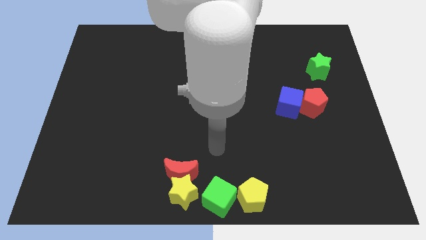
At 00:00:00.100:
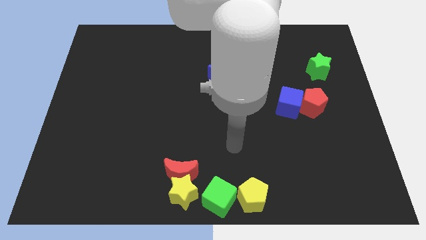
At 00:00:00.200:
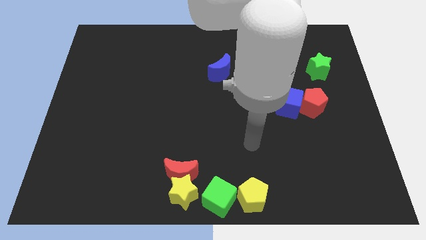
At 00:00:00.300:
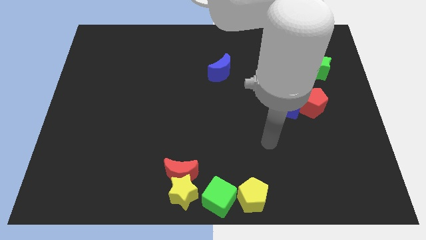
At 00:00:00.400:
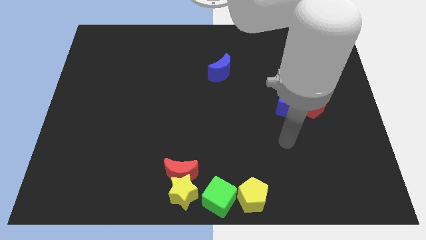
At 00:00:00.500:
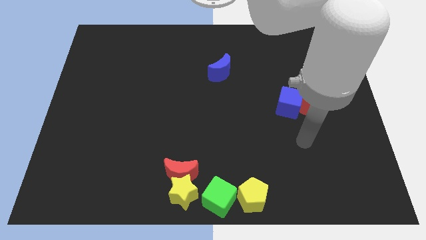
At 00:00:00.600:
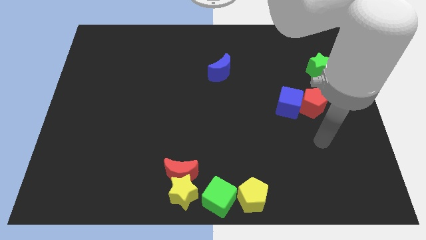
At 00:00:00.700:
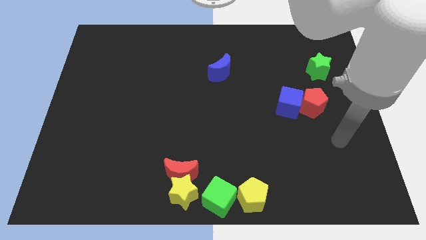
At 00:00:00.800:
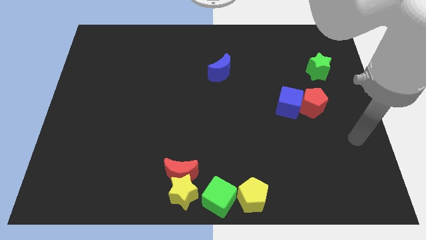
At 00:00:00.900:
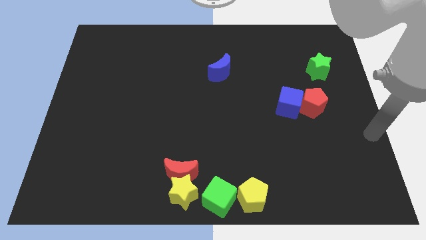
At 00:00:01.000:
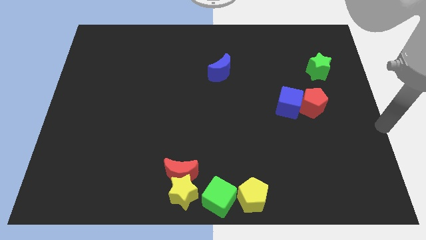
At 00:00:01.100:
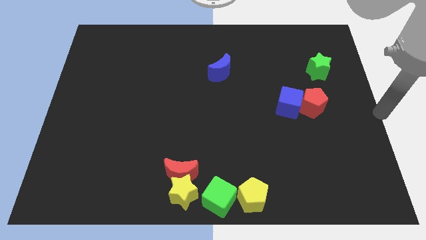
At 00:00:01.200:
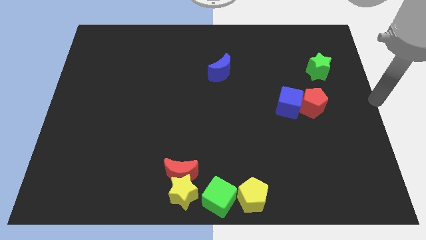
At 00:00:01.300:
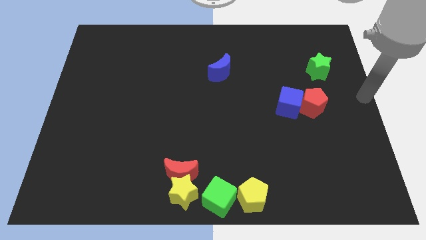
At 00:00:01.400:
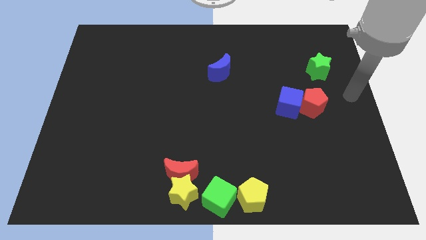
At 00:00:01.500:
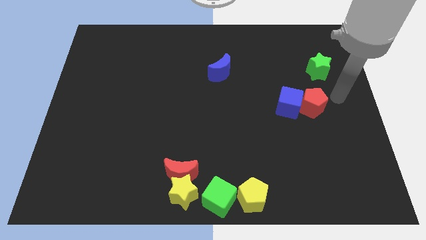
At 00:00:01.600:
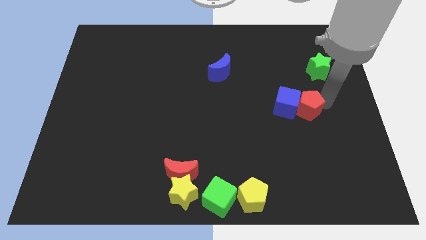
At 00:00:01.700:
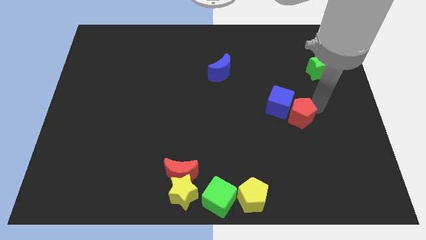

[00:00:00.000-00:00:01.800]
move arm right to the red pentagon

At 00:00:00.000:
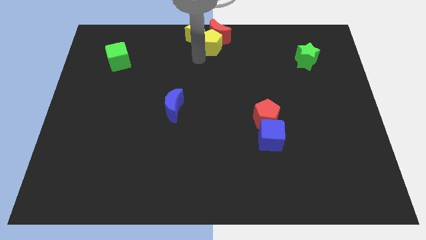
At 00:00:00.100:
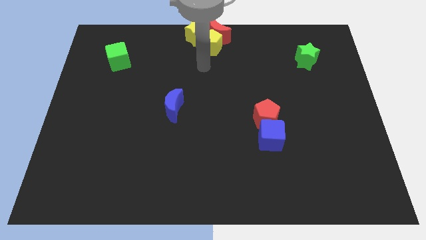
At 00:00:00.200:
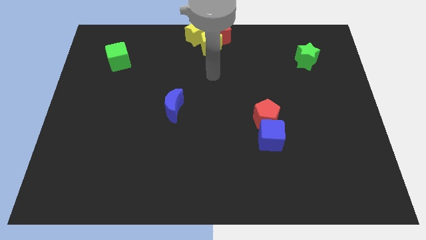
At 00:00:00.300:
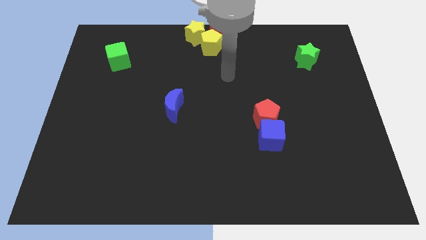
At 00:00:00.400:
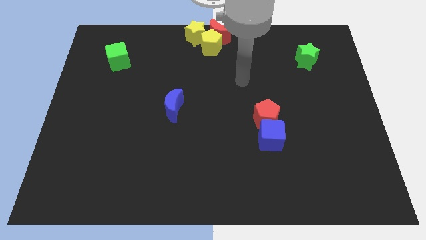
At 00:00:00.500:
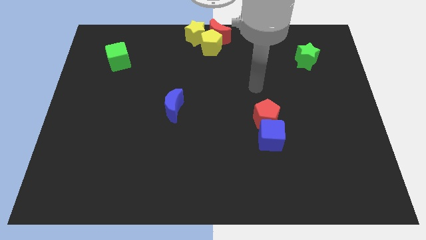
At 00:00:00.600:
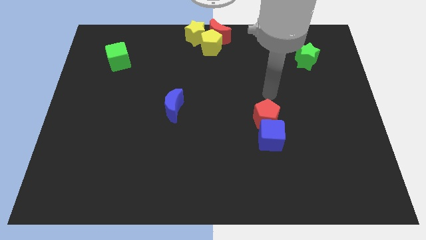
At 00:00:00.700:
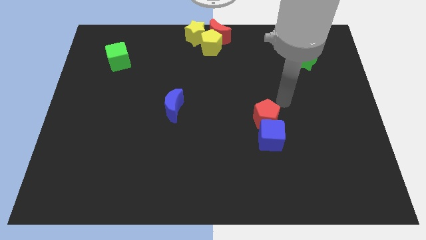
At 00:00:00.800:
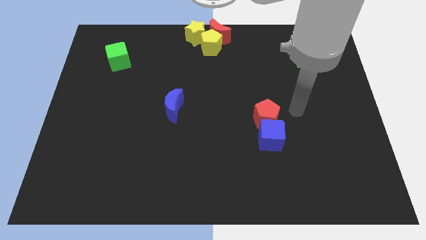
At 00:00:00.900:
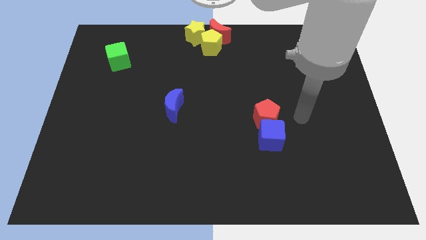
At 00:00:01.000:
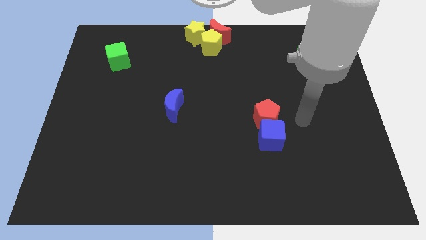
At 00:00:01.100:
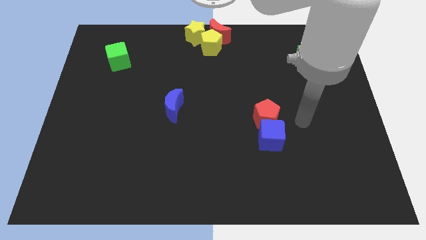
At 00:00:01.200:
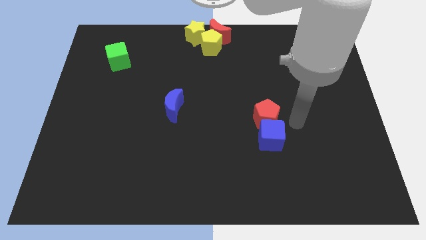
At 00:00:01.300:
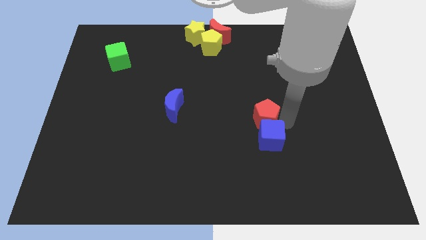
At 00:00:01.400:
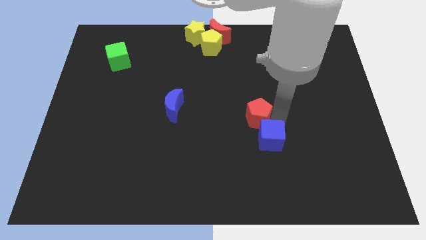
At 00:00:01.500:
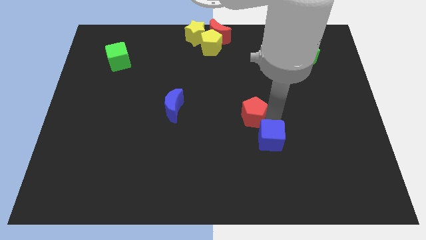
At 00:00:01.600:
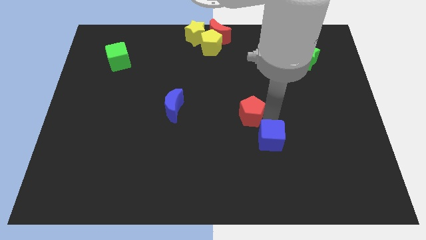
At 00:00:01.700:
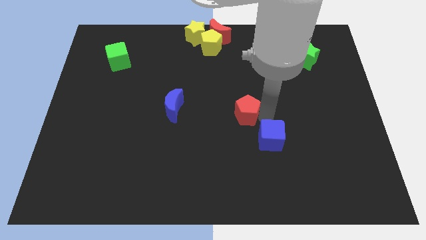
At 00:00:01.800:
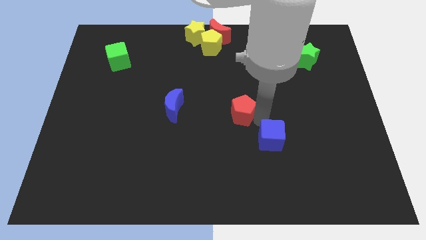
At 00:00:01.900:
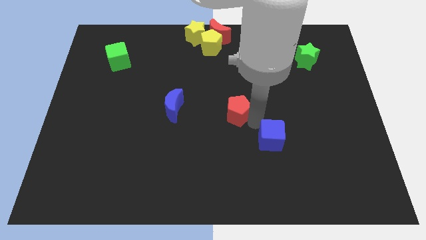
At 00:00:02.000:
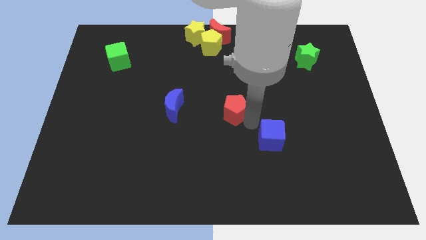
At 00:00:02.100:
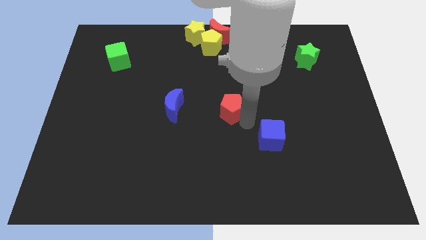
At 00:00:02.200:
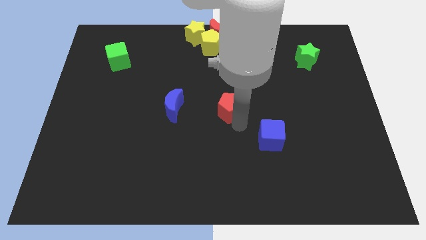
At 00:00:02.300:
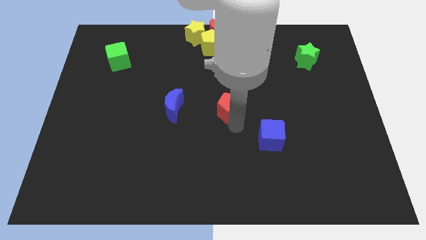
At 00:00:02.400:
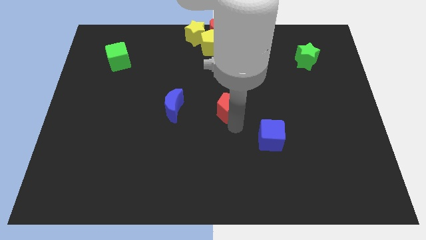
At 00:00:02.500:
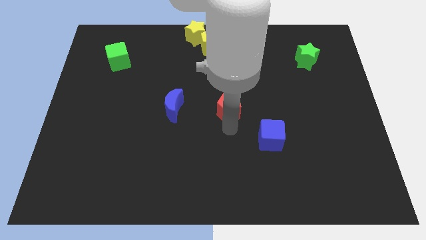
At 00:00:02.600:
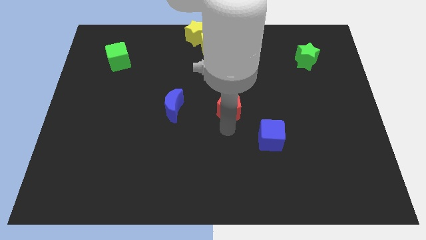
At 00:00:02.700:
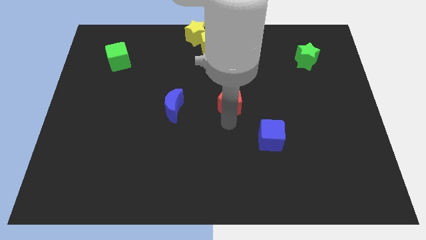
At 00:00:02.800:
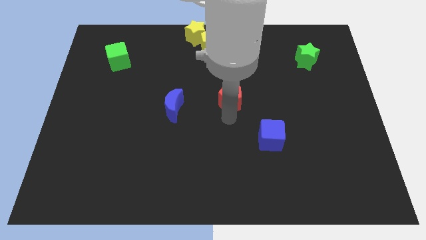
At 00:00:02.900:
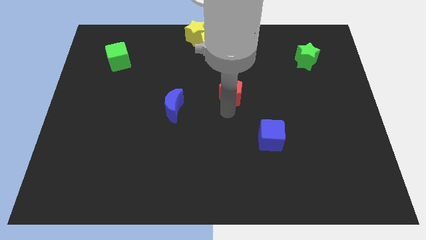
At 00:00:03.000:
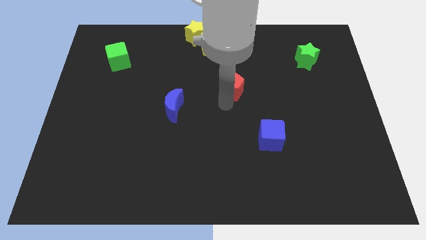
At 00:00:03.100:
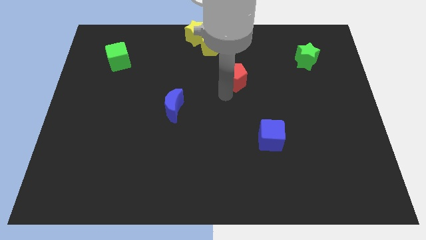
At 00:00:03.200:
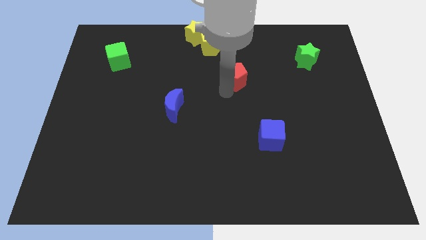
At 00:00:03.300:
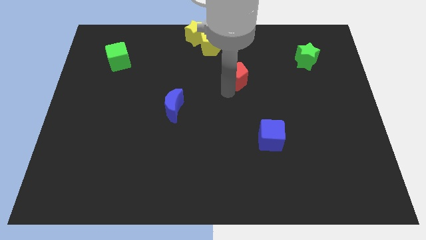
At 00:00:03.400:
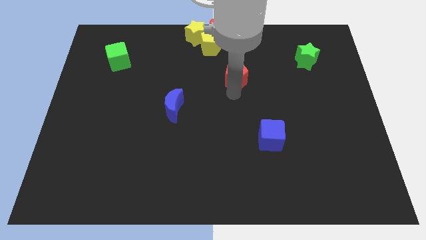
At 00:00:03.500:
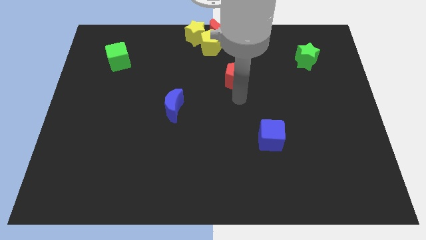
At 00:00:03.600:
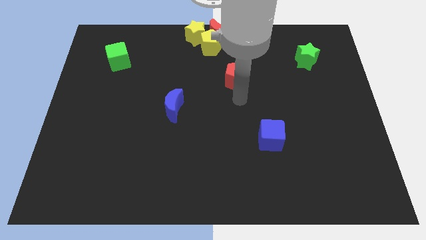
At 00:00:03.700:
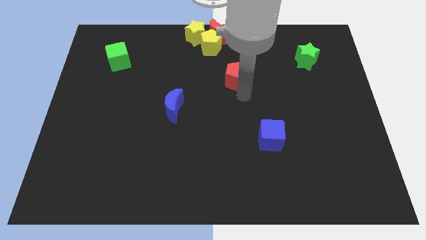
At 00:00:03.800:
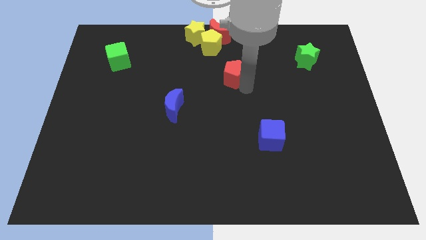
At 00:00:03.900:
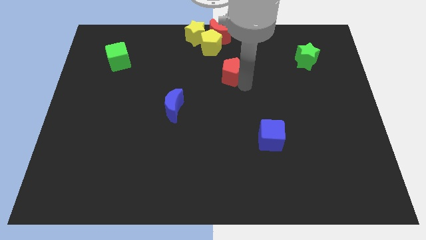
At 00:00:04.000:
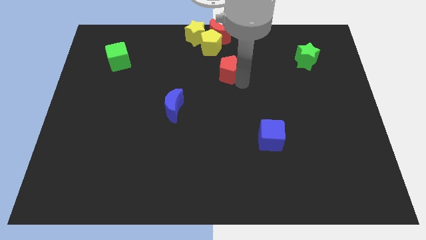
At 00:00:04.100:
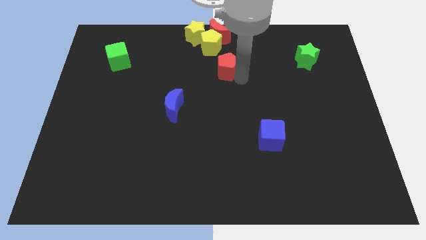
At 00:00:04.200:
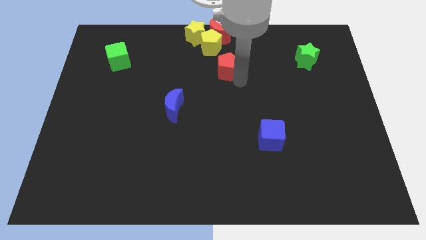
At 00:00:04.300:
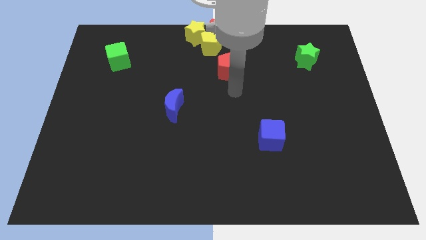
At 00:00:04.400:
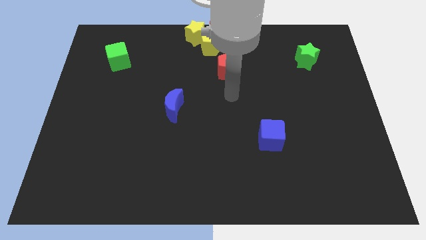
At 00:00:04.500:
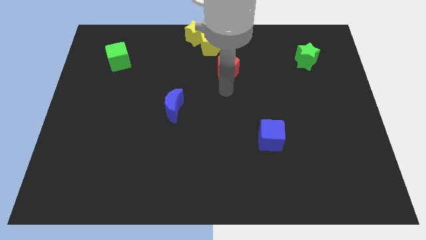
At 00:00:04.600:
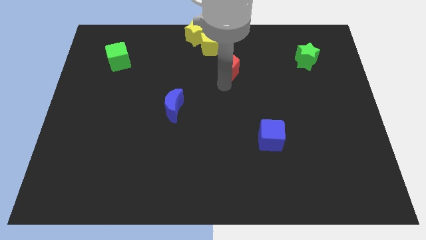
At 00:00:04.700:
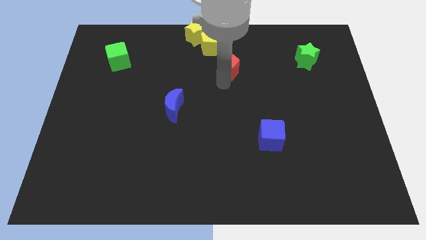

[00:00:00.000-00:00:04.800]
separate red pentagon from the blue cube

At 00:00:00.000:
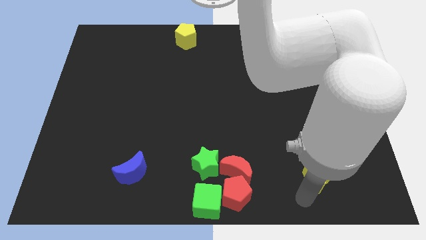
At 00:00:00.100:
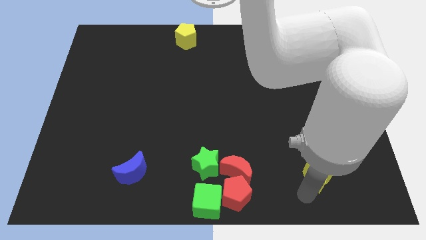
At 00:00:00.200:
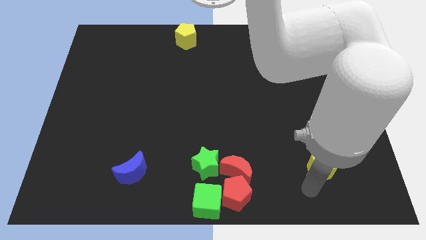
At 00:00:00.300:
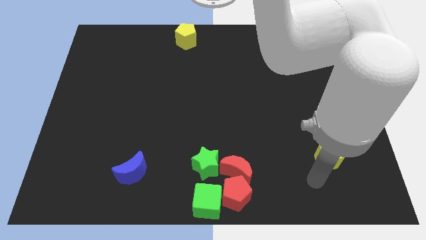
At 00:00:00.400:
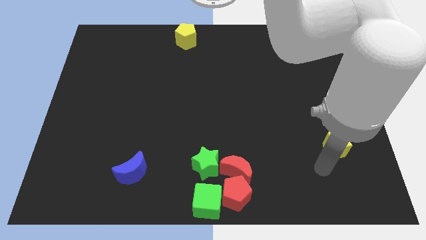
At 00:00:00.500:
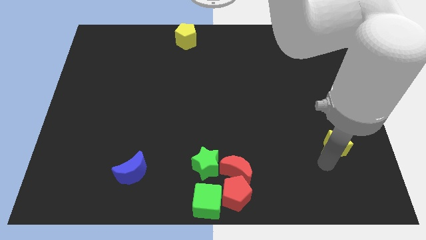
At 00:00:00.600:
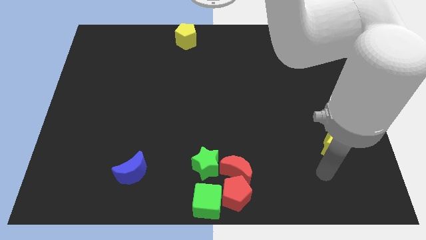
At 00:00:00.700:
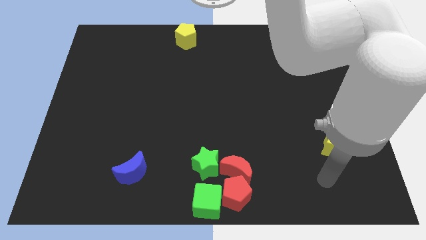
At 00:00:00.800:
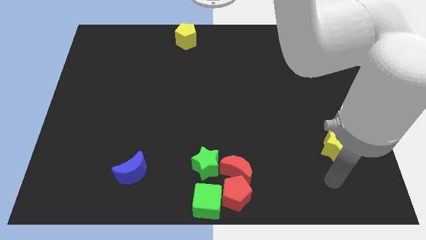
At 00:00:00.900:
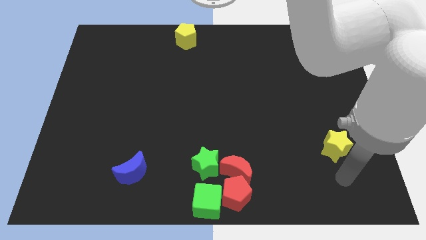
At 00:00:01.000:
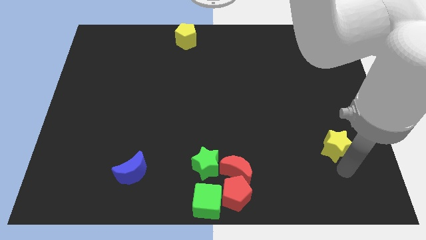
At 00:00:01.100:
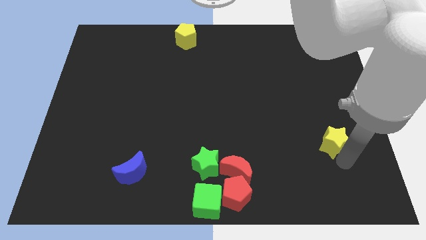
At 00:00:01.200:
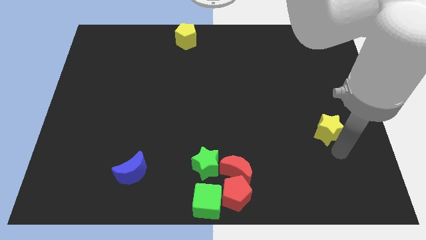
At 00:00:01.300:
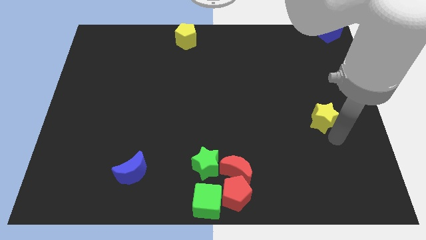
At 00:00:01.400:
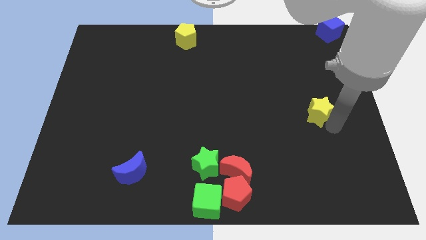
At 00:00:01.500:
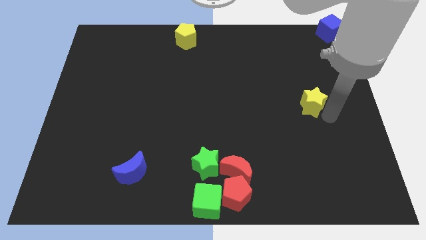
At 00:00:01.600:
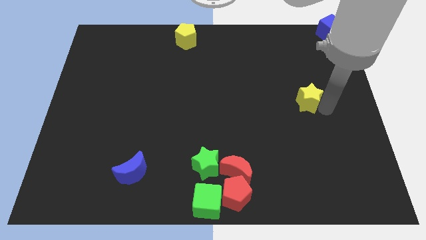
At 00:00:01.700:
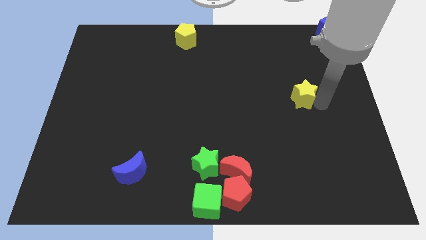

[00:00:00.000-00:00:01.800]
push yellow star towards center right of the board

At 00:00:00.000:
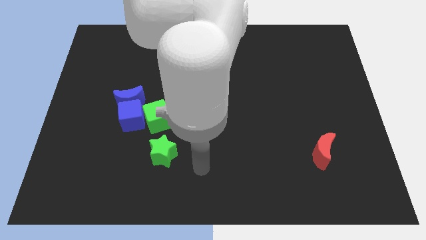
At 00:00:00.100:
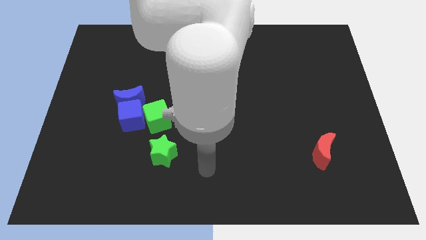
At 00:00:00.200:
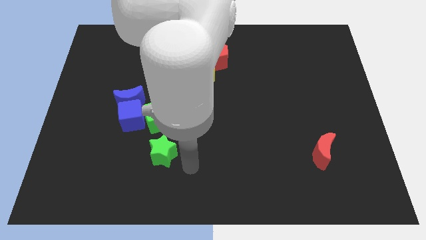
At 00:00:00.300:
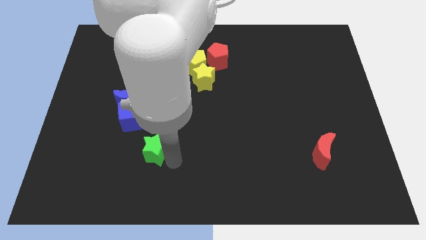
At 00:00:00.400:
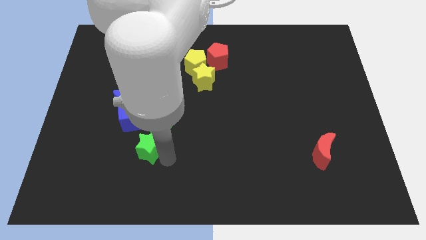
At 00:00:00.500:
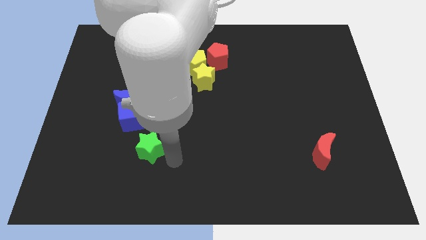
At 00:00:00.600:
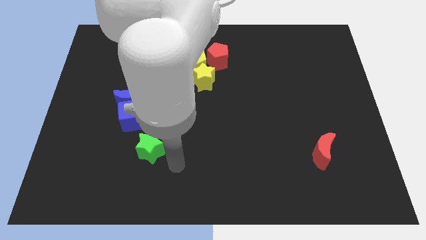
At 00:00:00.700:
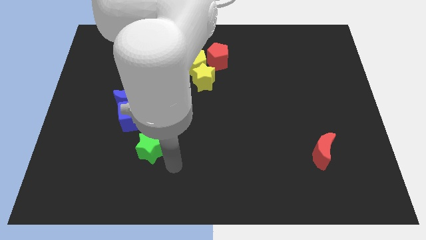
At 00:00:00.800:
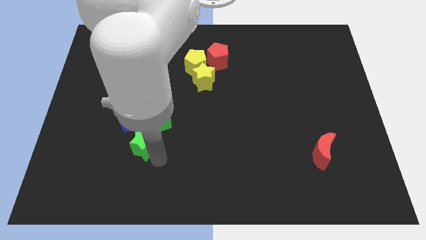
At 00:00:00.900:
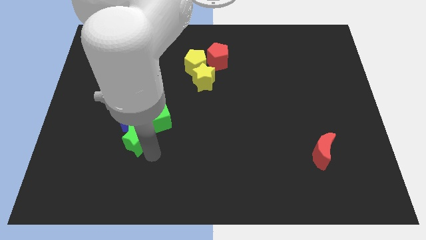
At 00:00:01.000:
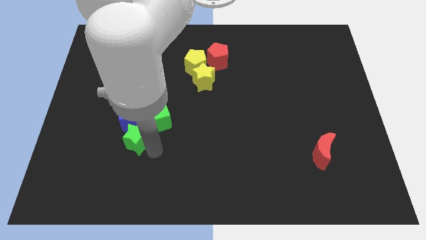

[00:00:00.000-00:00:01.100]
move the green star to the bottom of the blue cube
